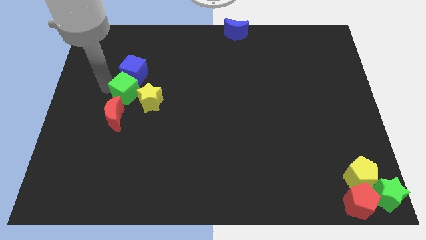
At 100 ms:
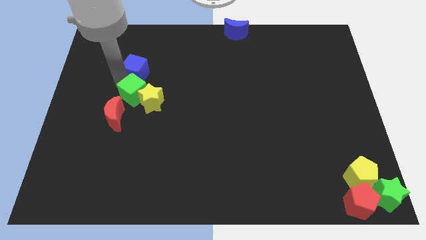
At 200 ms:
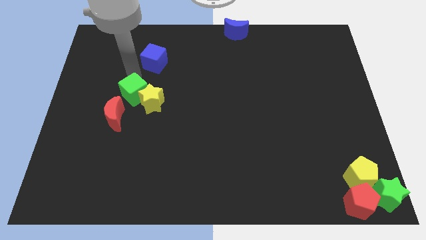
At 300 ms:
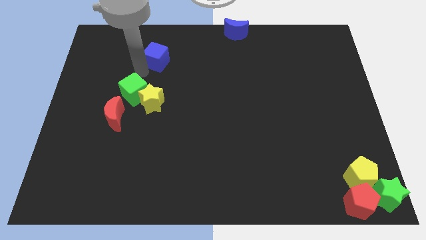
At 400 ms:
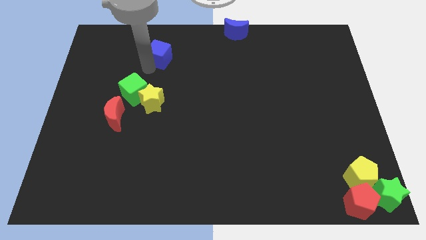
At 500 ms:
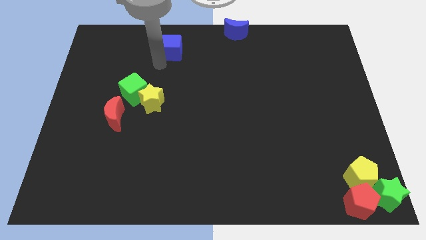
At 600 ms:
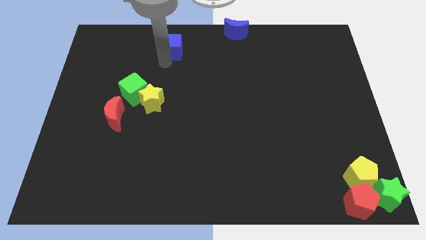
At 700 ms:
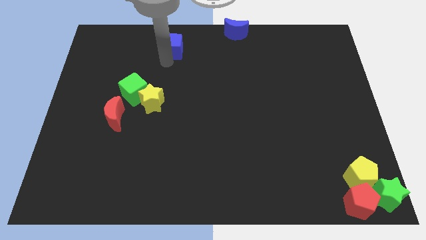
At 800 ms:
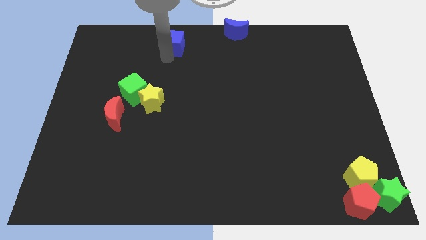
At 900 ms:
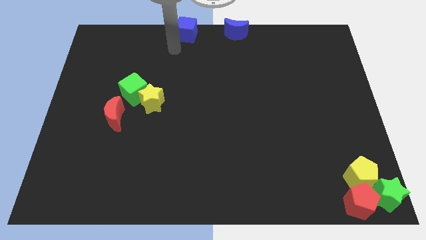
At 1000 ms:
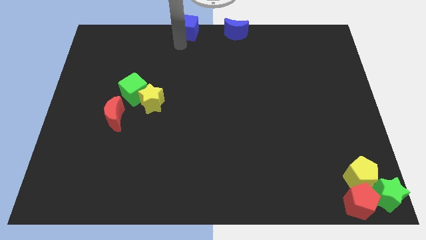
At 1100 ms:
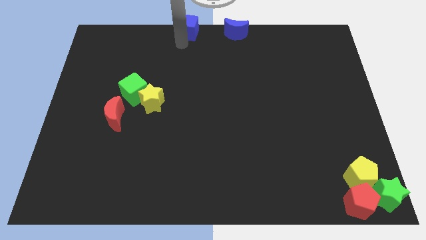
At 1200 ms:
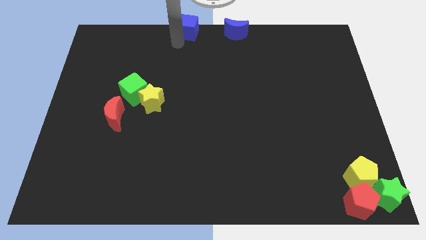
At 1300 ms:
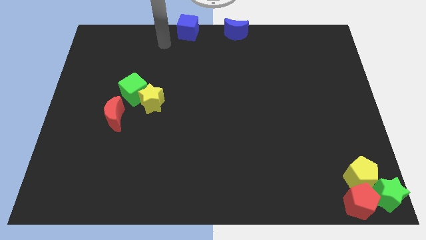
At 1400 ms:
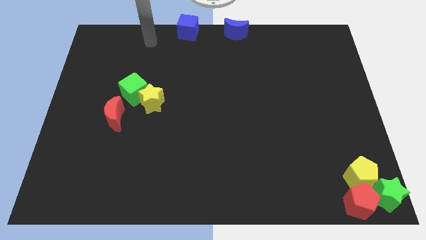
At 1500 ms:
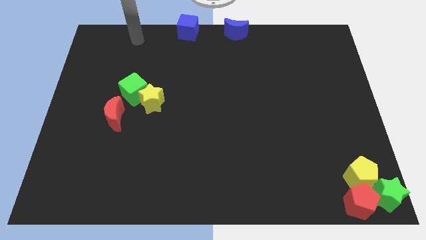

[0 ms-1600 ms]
push the blue cube to the top center of the board

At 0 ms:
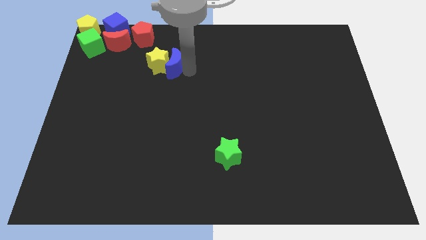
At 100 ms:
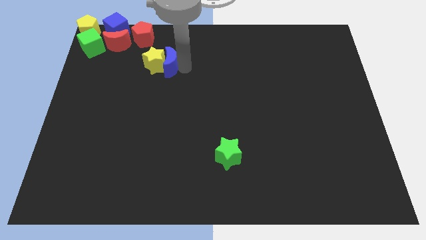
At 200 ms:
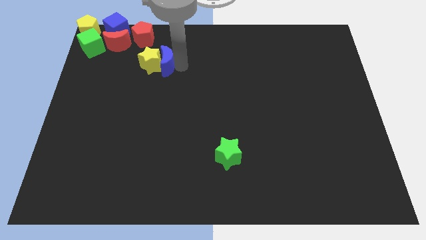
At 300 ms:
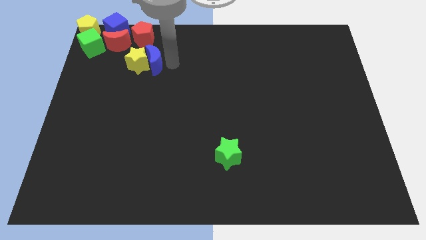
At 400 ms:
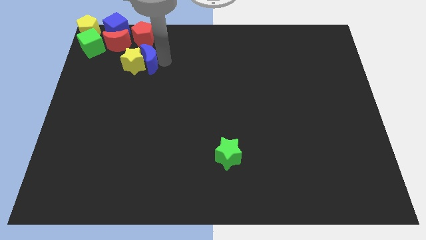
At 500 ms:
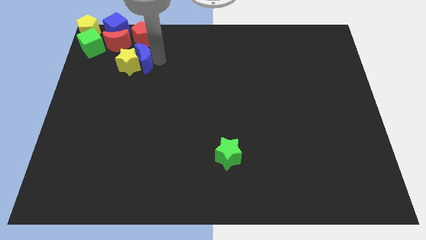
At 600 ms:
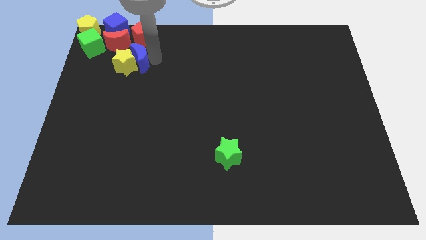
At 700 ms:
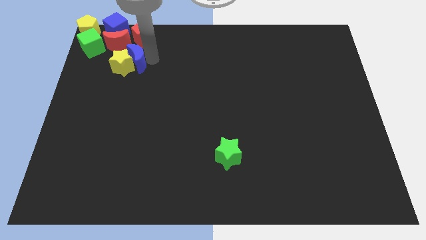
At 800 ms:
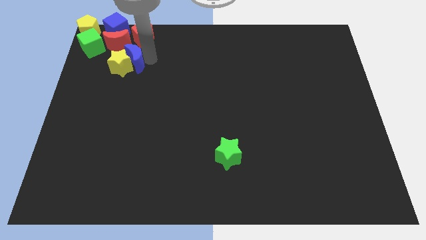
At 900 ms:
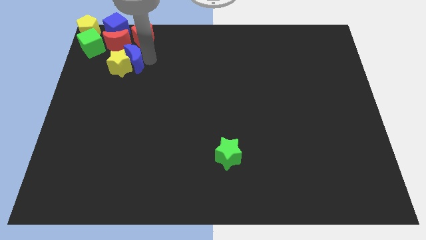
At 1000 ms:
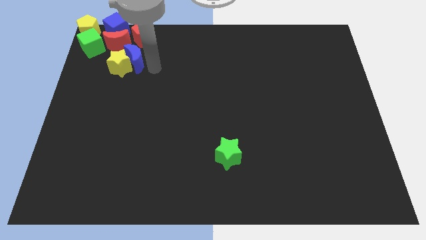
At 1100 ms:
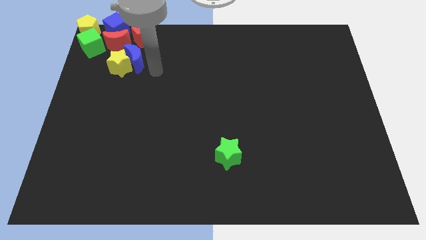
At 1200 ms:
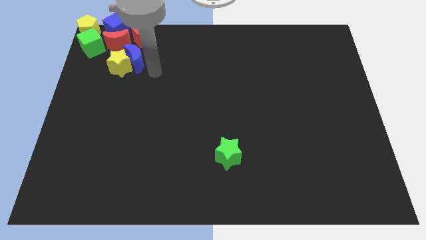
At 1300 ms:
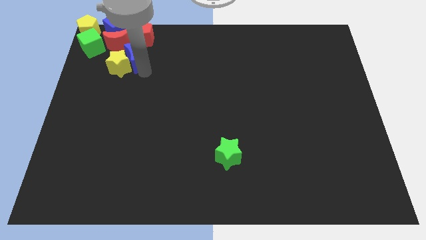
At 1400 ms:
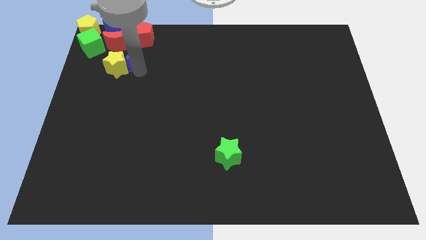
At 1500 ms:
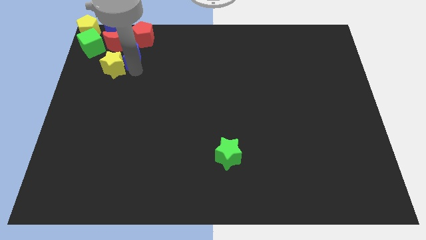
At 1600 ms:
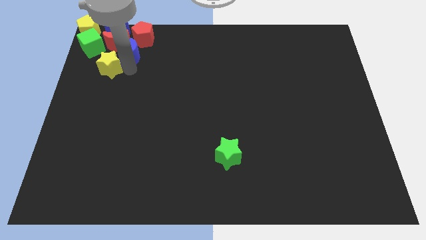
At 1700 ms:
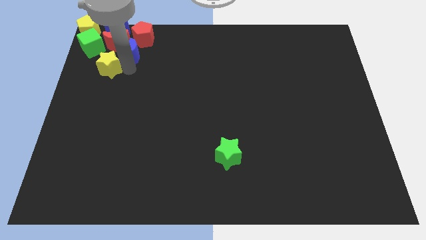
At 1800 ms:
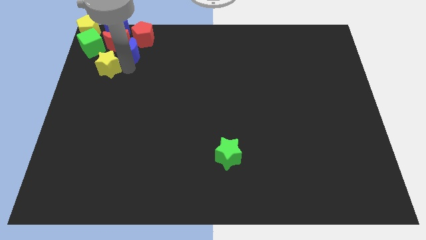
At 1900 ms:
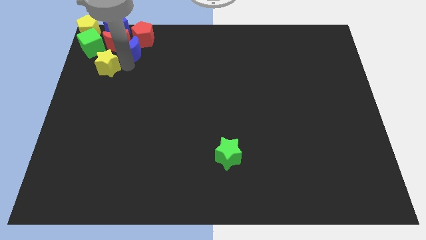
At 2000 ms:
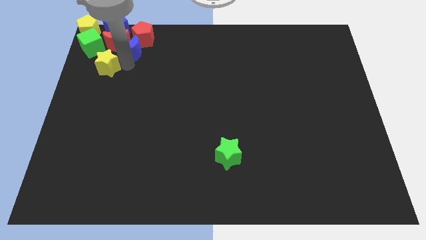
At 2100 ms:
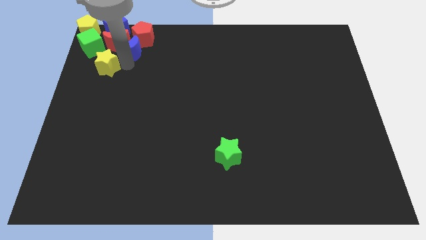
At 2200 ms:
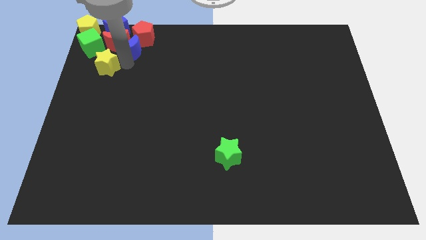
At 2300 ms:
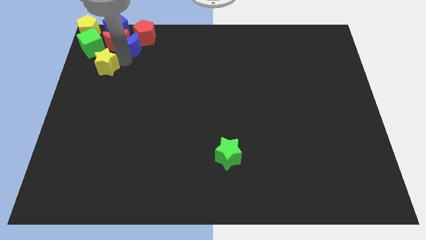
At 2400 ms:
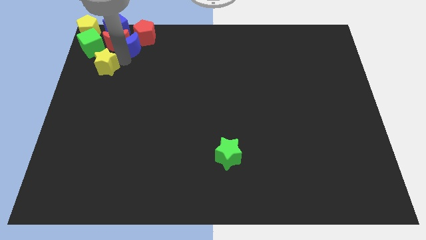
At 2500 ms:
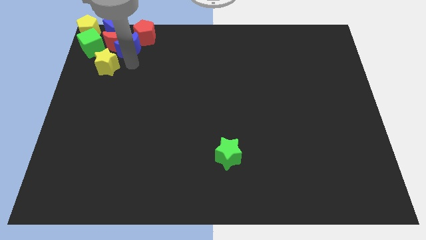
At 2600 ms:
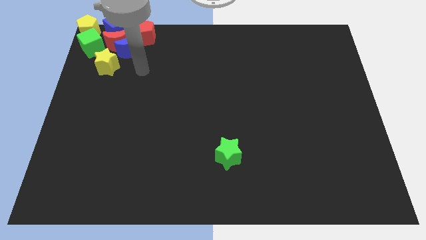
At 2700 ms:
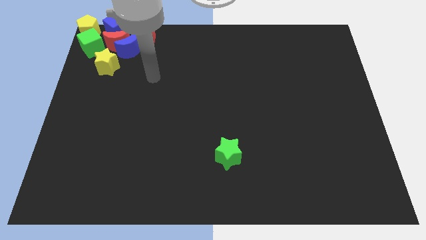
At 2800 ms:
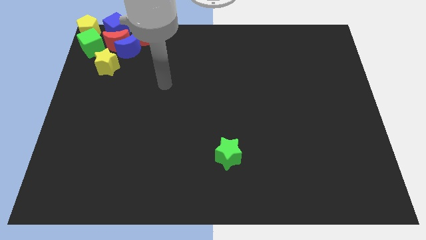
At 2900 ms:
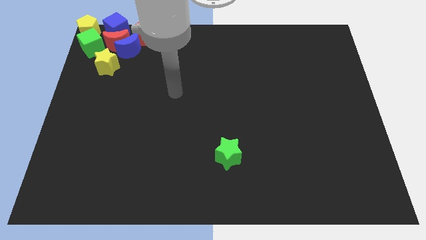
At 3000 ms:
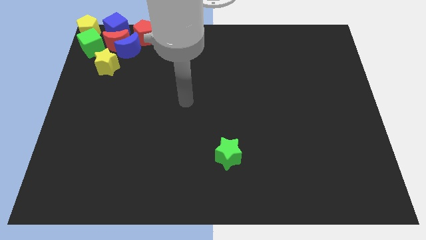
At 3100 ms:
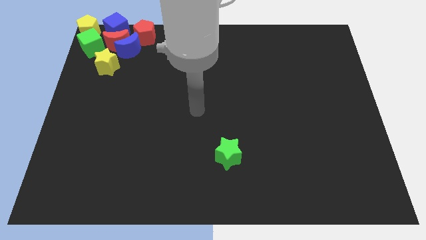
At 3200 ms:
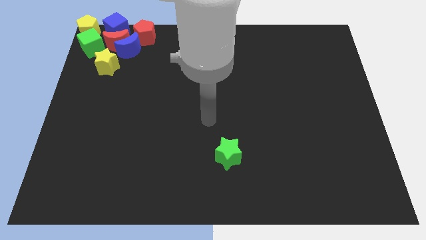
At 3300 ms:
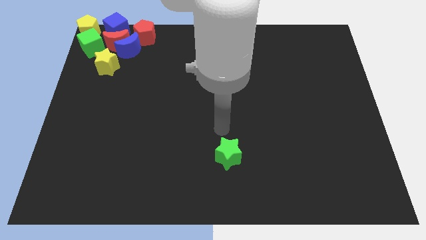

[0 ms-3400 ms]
push the yellow star and blue moon into the group of blocks at the top left corner of the board

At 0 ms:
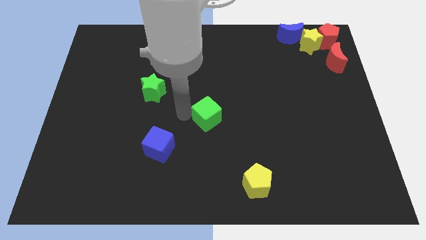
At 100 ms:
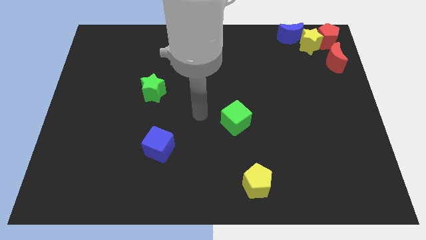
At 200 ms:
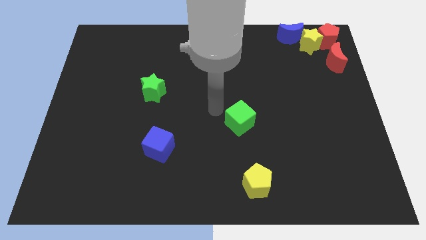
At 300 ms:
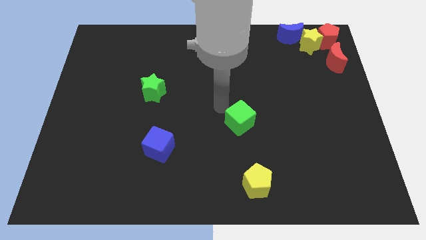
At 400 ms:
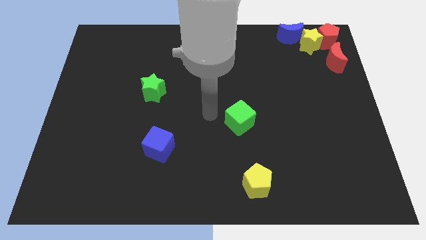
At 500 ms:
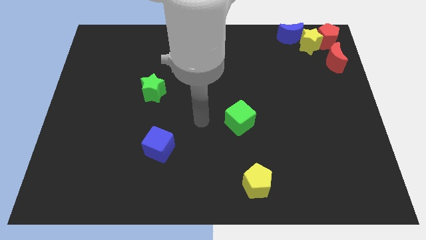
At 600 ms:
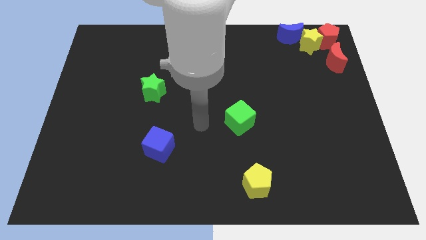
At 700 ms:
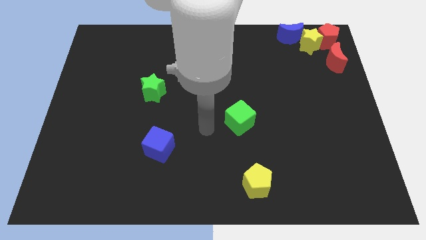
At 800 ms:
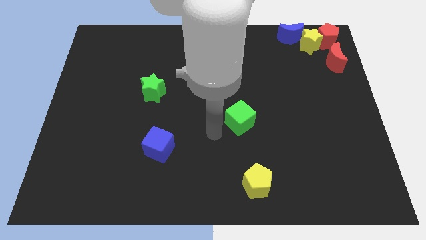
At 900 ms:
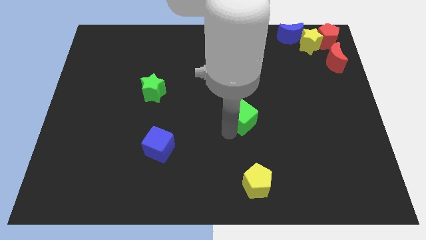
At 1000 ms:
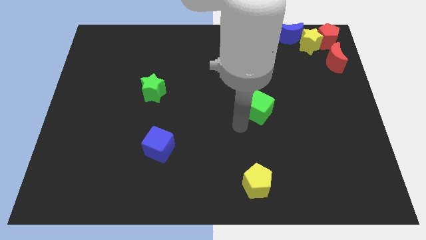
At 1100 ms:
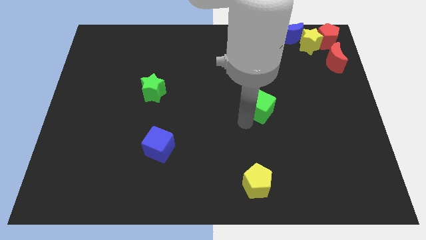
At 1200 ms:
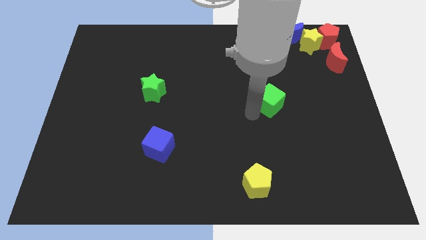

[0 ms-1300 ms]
place the green cube above the yellow pentagon

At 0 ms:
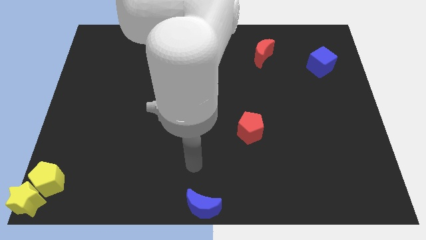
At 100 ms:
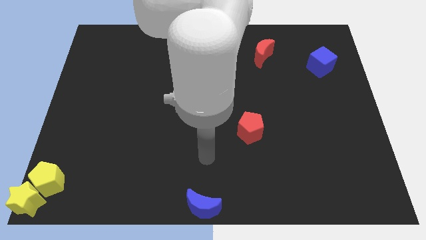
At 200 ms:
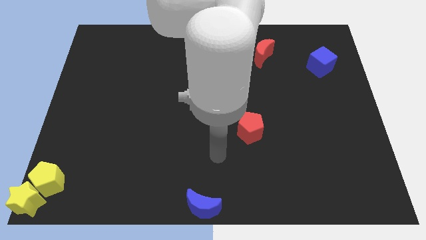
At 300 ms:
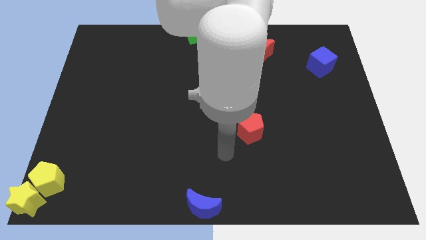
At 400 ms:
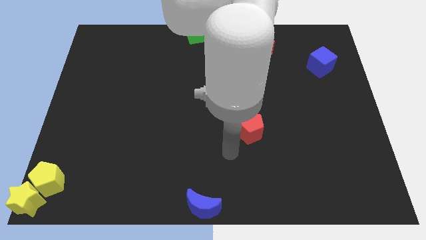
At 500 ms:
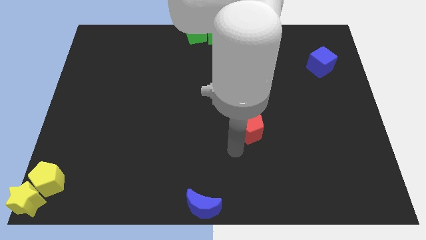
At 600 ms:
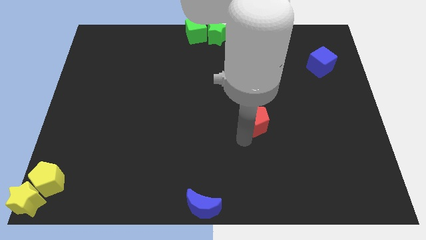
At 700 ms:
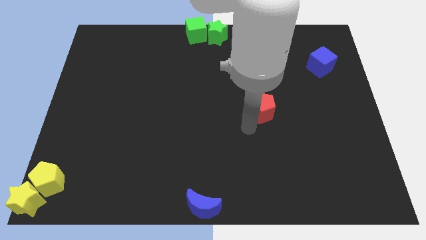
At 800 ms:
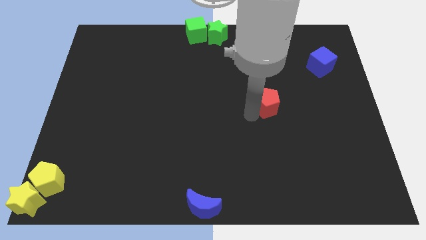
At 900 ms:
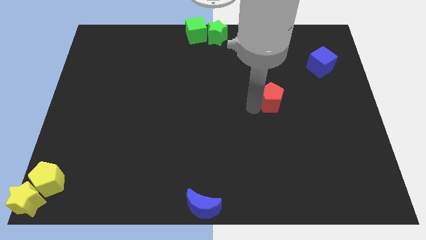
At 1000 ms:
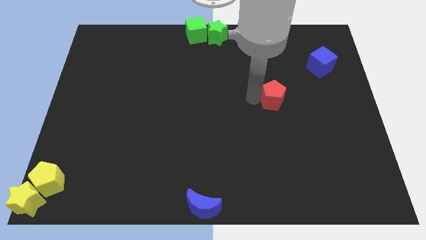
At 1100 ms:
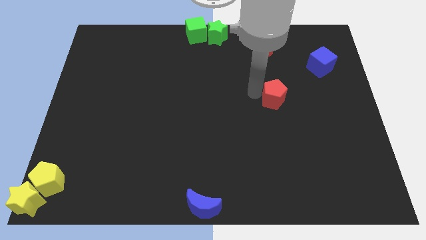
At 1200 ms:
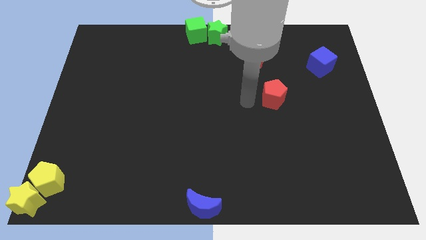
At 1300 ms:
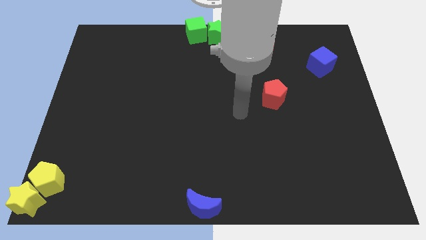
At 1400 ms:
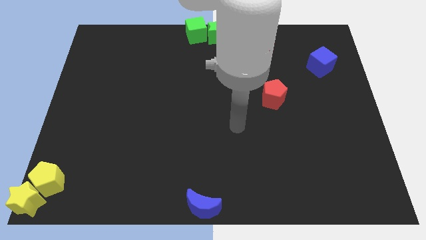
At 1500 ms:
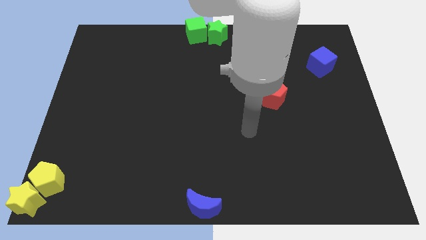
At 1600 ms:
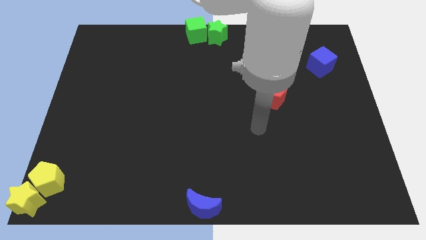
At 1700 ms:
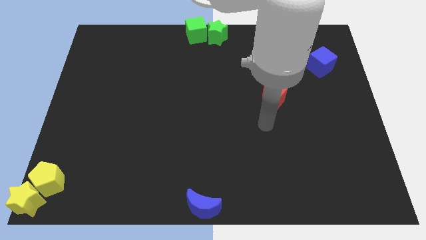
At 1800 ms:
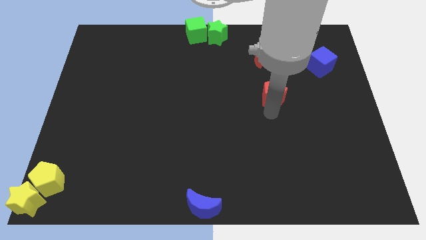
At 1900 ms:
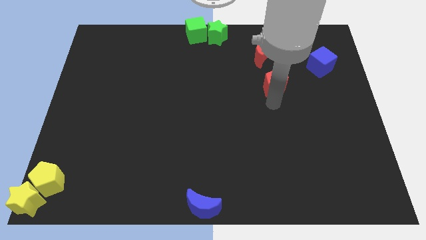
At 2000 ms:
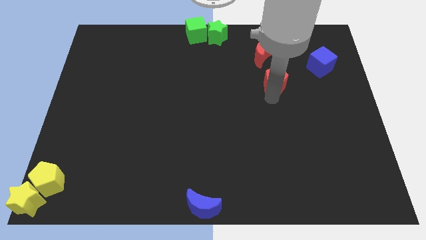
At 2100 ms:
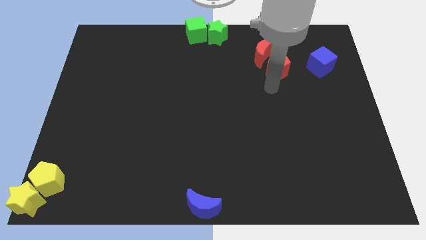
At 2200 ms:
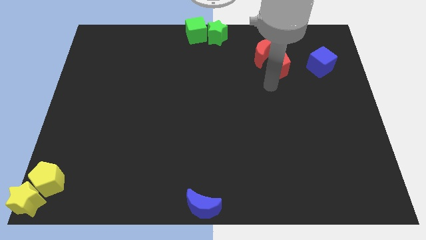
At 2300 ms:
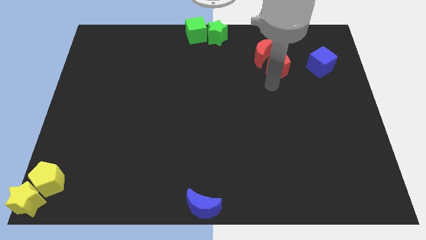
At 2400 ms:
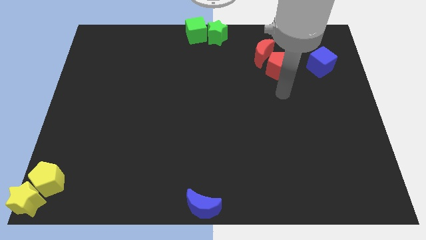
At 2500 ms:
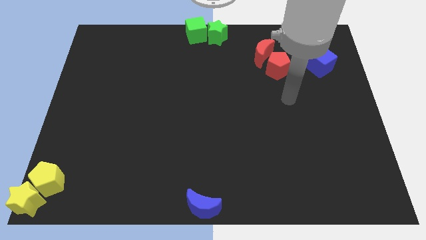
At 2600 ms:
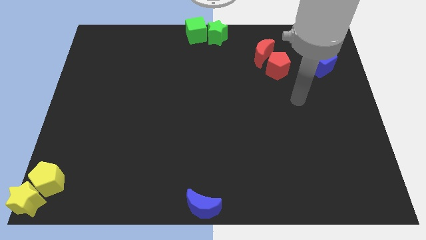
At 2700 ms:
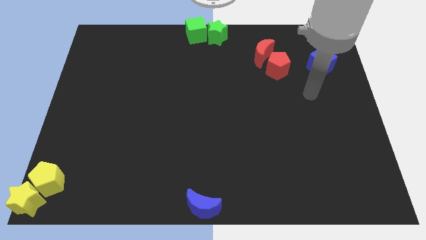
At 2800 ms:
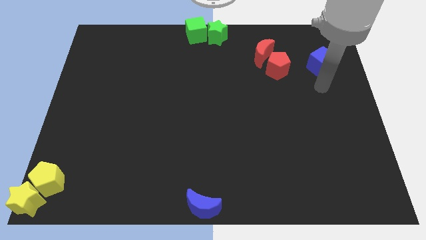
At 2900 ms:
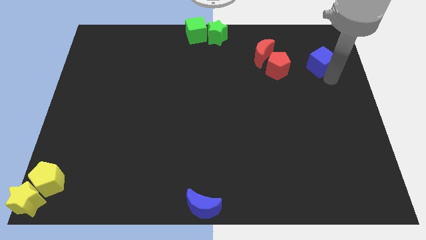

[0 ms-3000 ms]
move red pentagon close to red crescent
